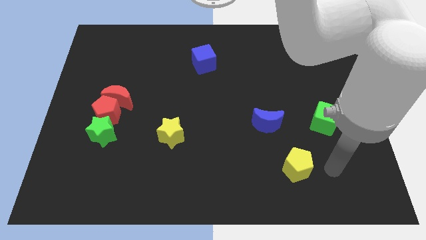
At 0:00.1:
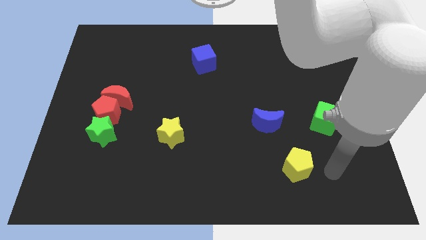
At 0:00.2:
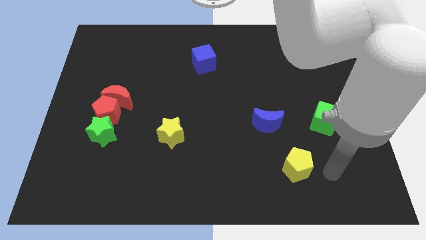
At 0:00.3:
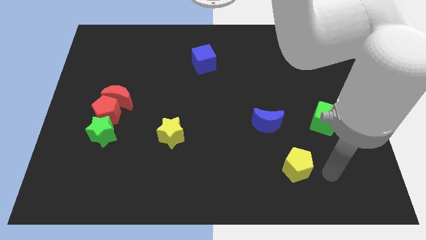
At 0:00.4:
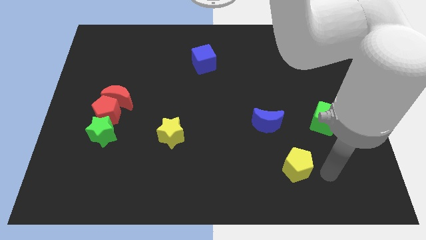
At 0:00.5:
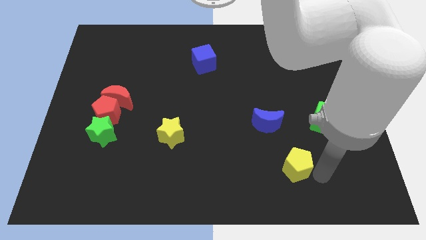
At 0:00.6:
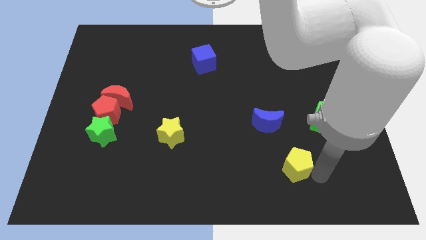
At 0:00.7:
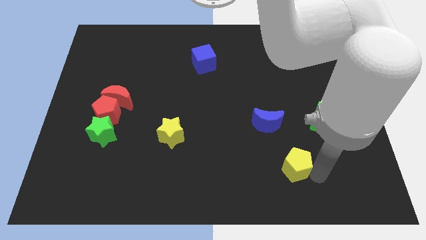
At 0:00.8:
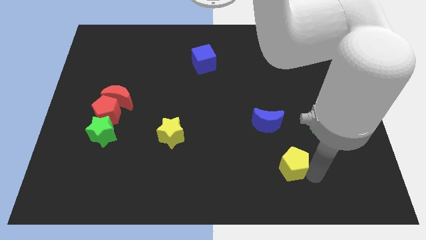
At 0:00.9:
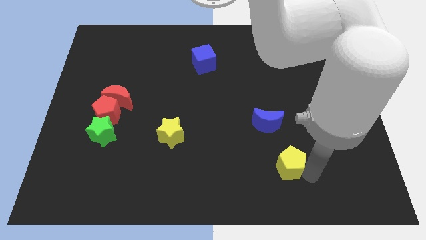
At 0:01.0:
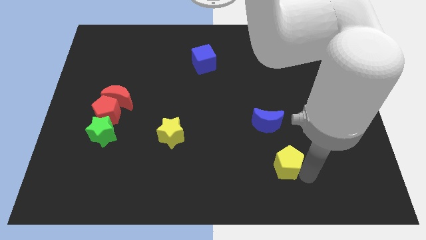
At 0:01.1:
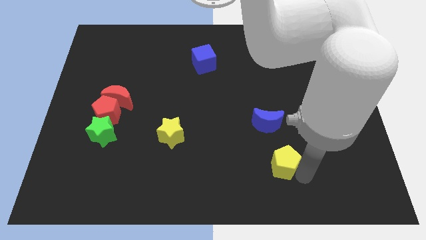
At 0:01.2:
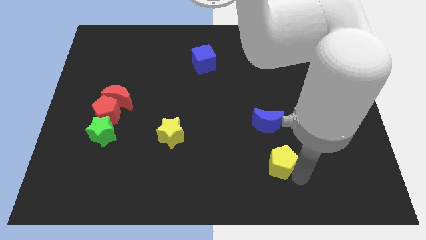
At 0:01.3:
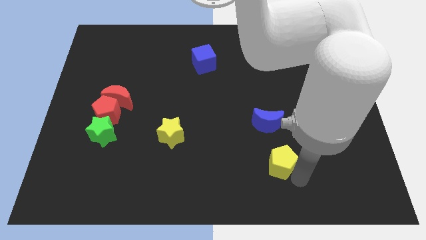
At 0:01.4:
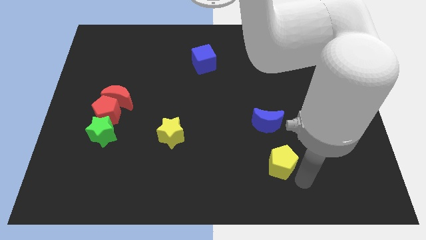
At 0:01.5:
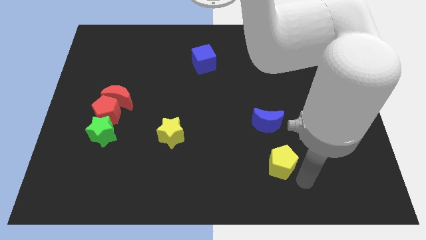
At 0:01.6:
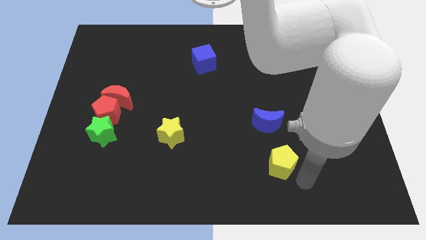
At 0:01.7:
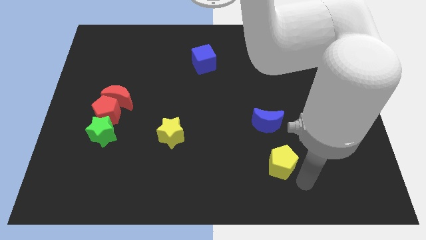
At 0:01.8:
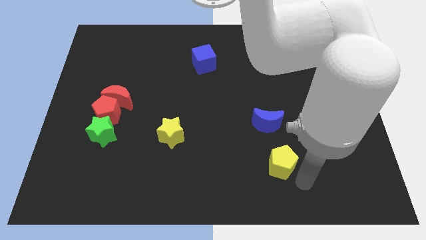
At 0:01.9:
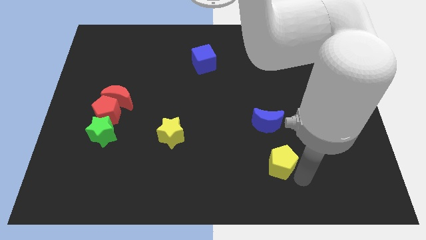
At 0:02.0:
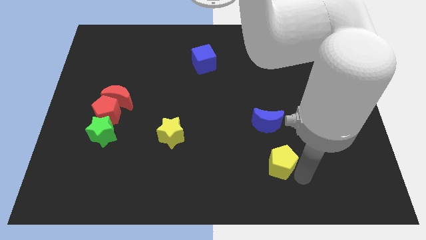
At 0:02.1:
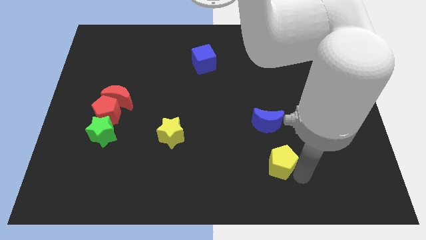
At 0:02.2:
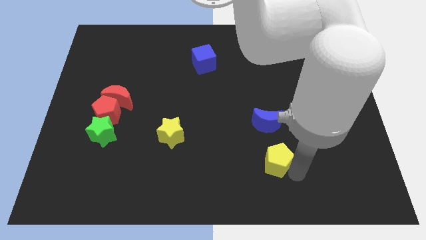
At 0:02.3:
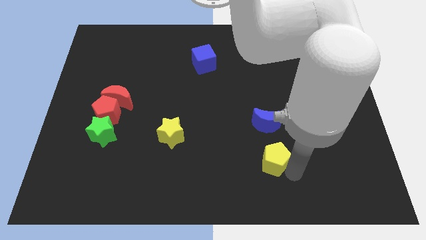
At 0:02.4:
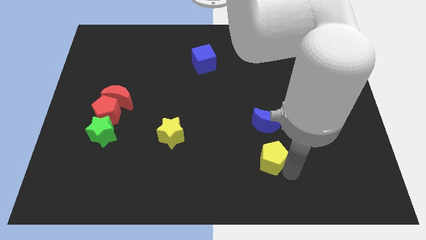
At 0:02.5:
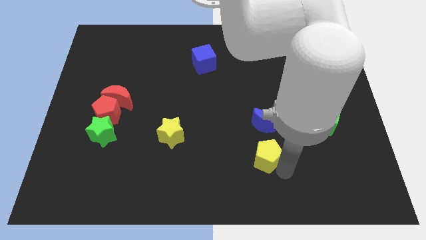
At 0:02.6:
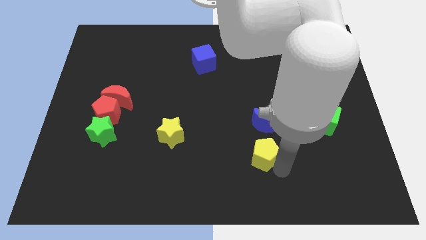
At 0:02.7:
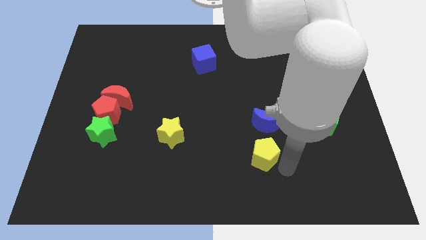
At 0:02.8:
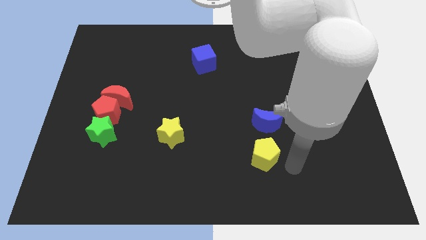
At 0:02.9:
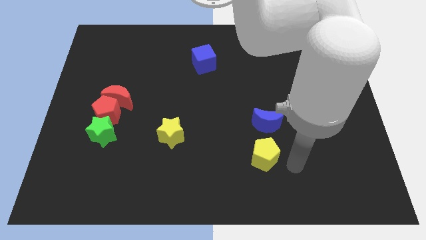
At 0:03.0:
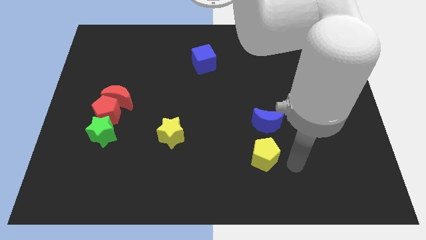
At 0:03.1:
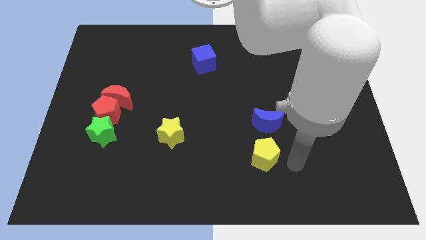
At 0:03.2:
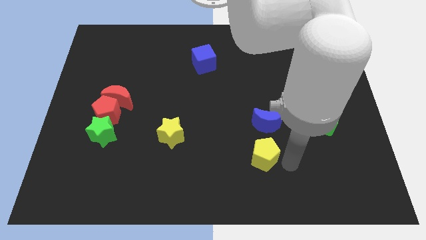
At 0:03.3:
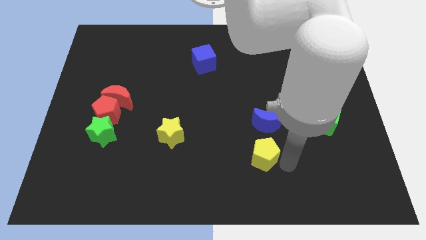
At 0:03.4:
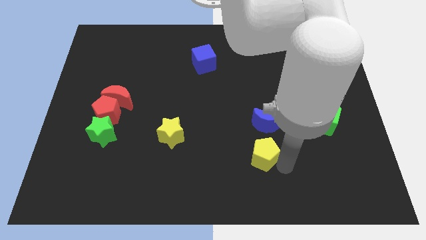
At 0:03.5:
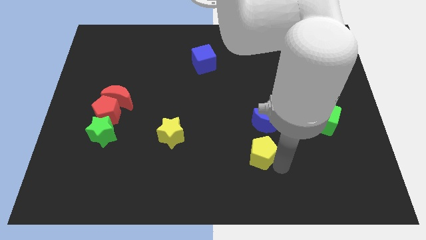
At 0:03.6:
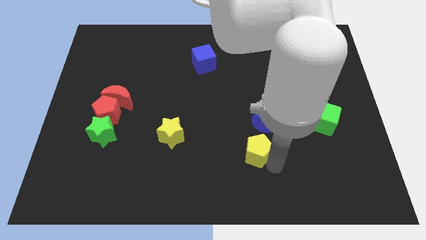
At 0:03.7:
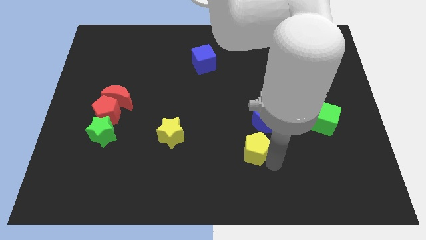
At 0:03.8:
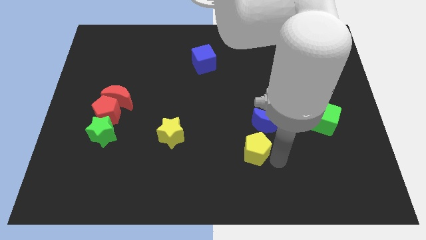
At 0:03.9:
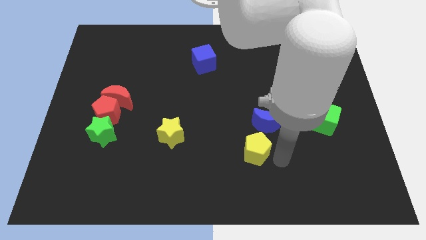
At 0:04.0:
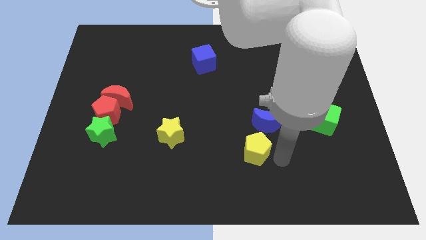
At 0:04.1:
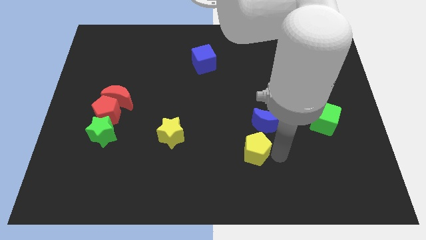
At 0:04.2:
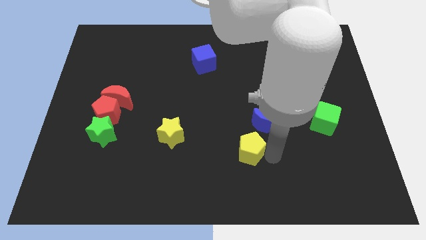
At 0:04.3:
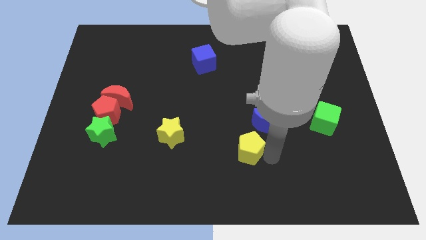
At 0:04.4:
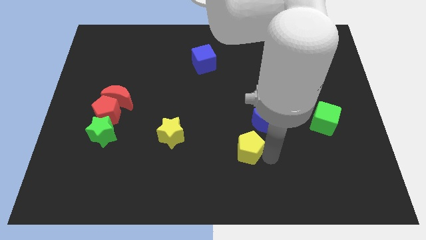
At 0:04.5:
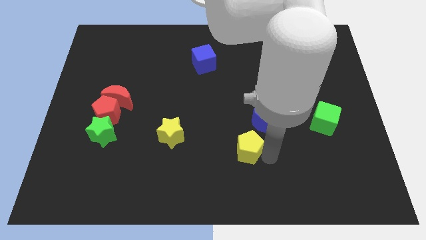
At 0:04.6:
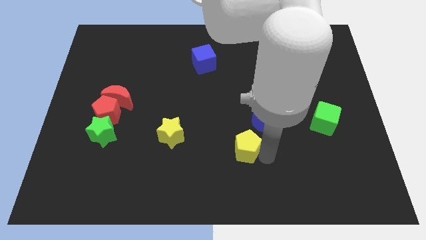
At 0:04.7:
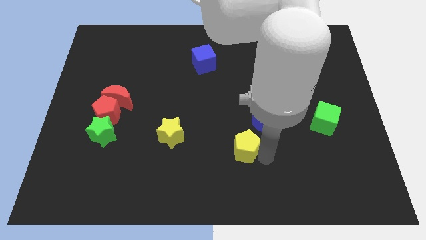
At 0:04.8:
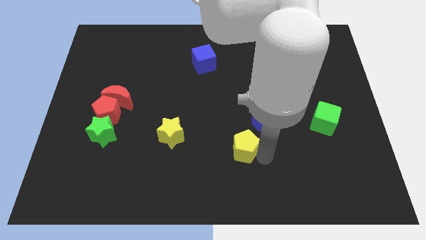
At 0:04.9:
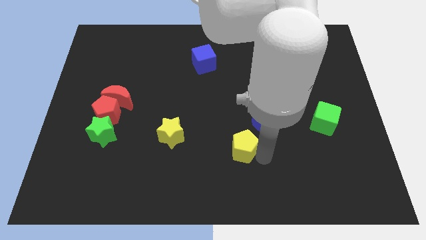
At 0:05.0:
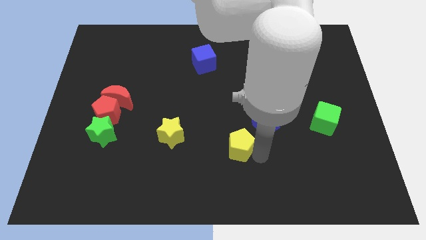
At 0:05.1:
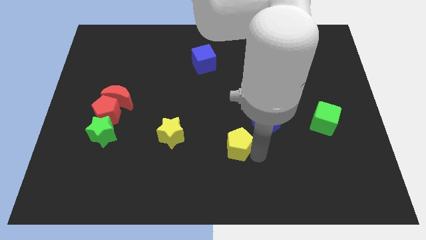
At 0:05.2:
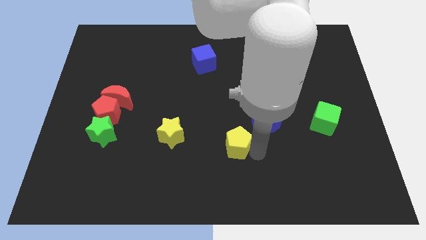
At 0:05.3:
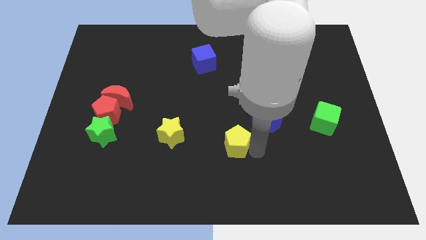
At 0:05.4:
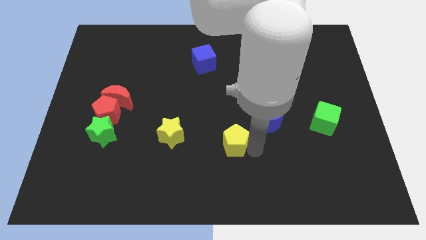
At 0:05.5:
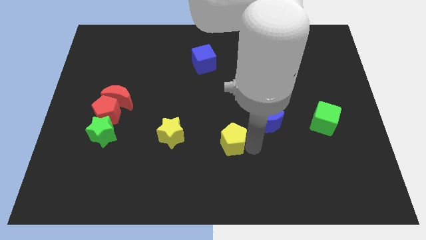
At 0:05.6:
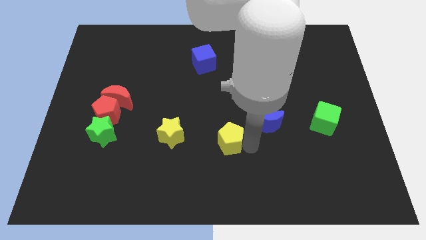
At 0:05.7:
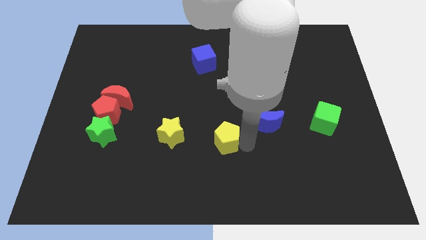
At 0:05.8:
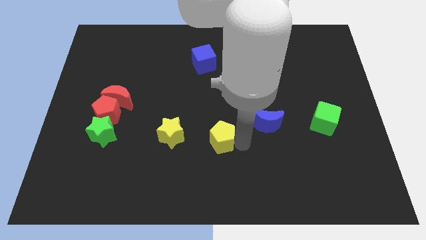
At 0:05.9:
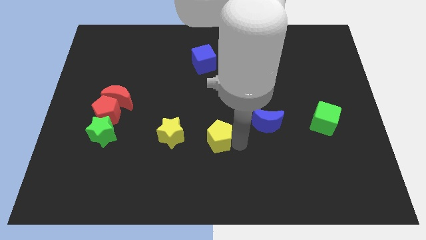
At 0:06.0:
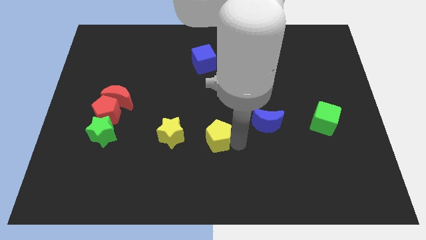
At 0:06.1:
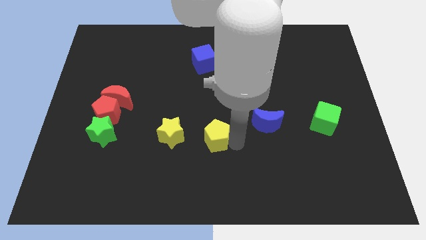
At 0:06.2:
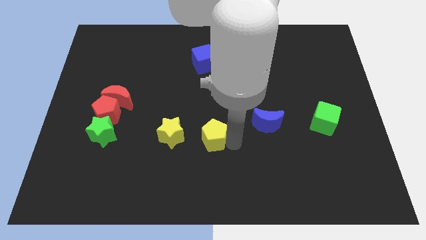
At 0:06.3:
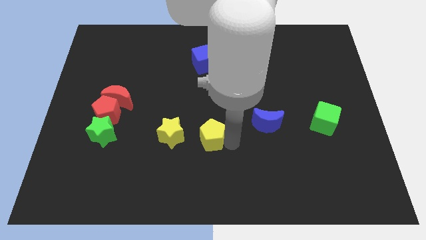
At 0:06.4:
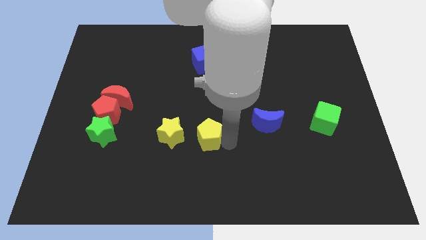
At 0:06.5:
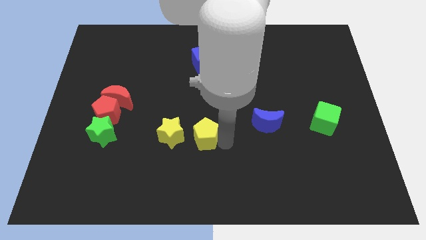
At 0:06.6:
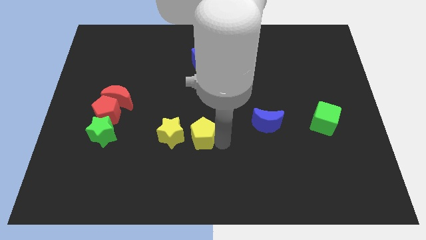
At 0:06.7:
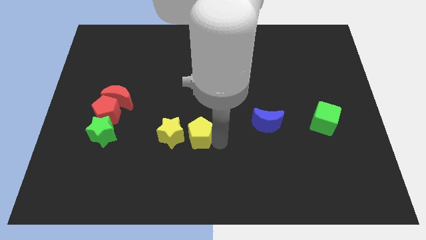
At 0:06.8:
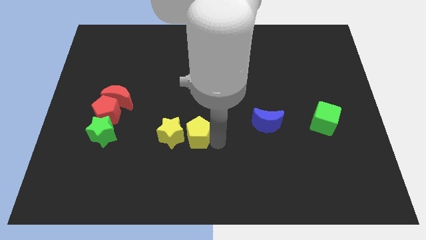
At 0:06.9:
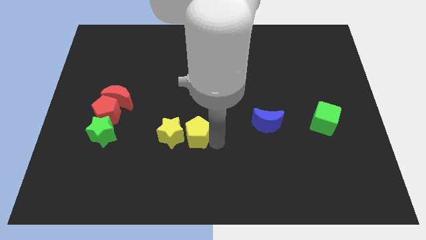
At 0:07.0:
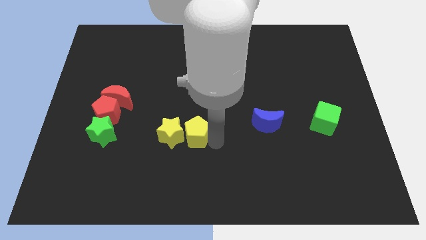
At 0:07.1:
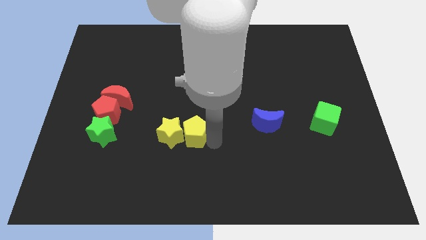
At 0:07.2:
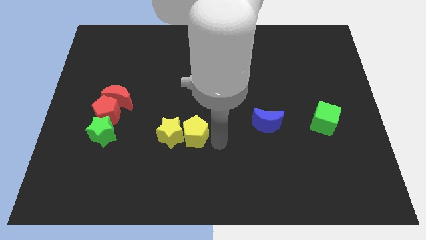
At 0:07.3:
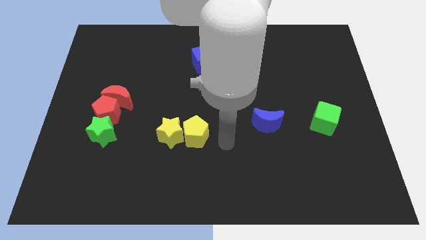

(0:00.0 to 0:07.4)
push the yellow pentagon to the right side of the yellow star

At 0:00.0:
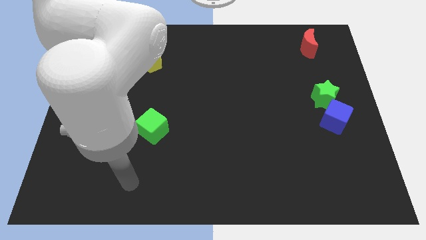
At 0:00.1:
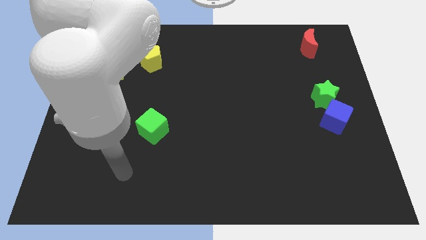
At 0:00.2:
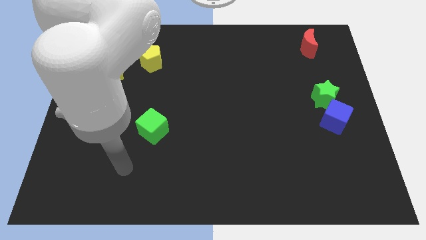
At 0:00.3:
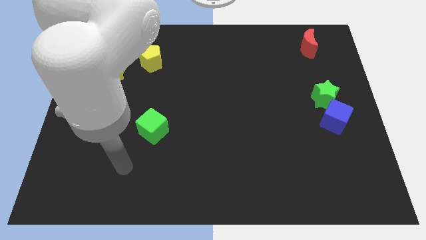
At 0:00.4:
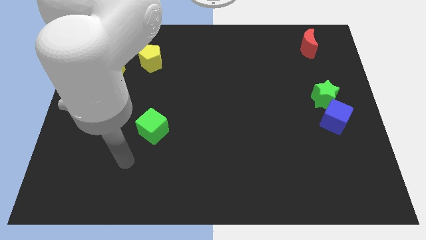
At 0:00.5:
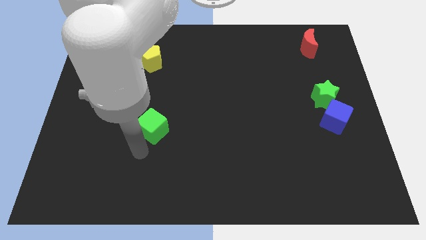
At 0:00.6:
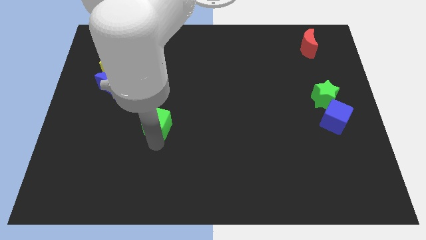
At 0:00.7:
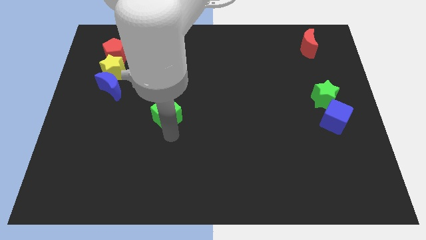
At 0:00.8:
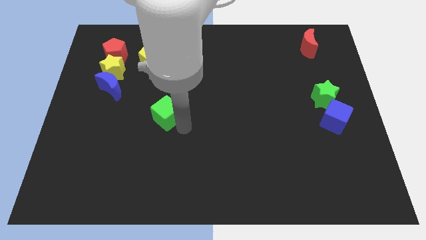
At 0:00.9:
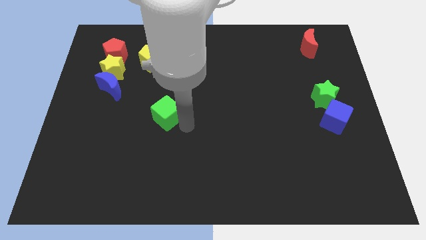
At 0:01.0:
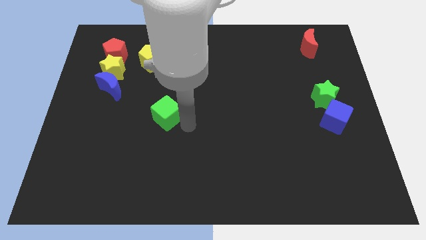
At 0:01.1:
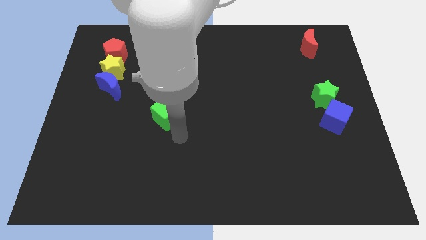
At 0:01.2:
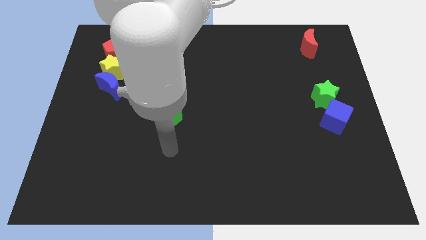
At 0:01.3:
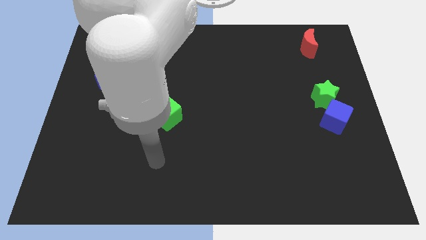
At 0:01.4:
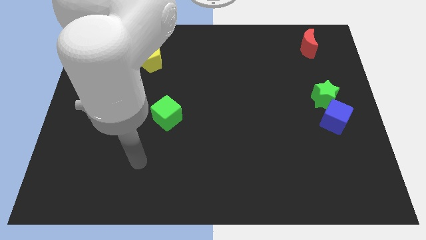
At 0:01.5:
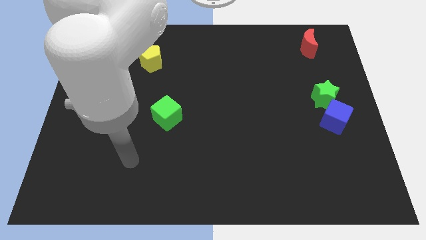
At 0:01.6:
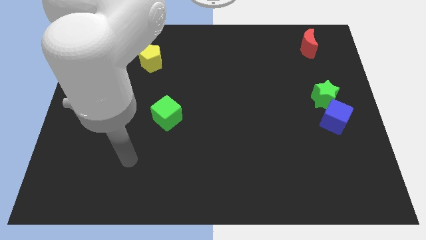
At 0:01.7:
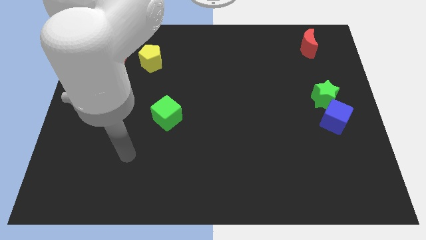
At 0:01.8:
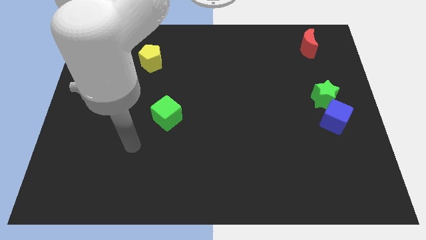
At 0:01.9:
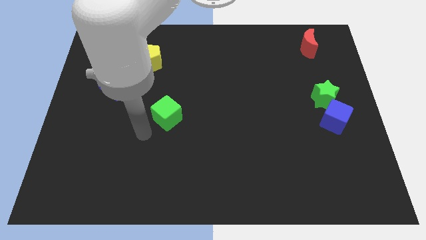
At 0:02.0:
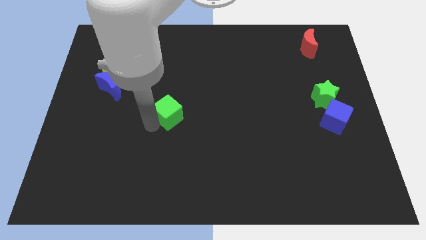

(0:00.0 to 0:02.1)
push green cube towards center of the board
